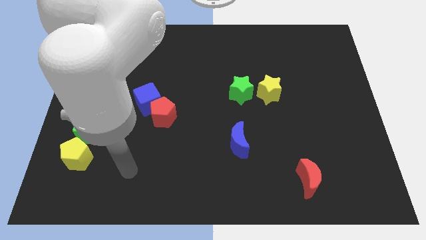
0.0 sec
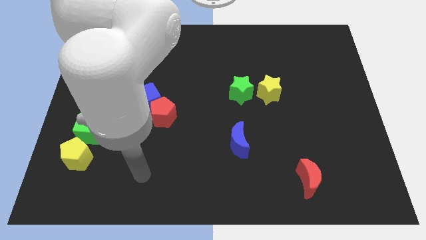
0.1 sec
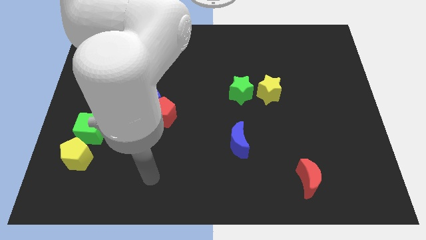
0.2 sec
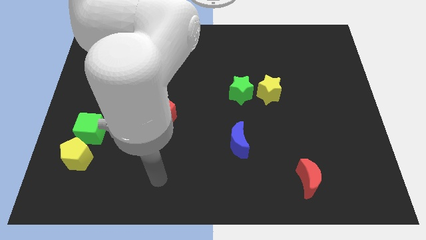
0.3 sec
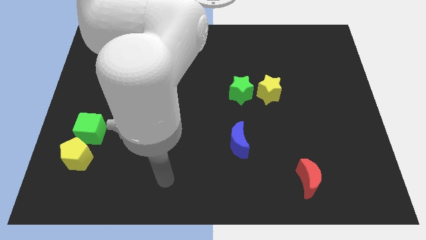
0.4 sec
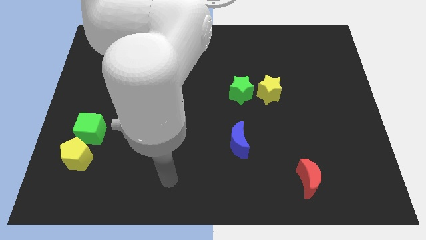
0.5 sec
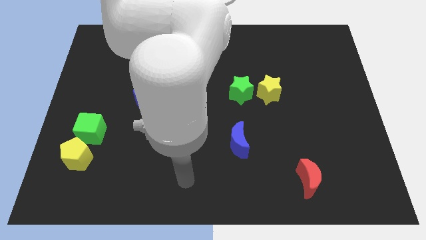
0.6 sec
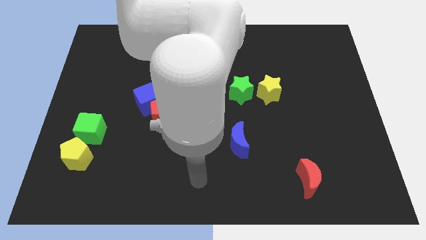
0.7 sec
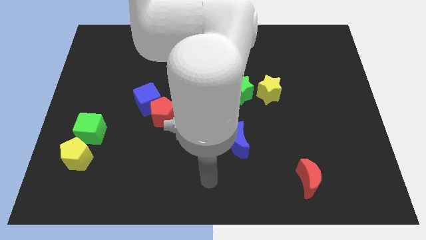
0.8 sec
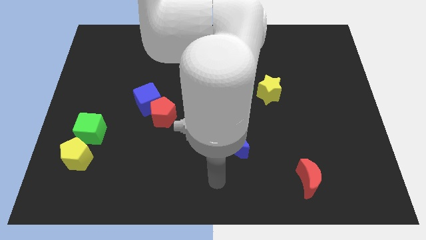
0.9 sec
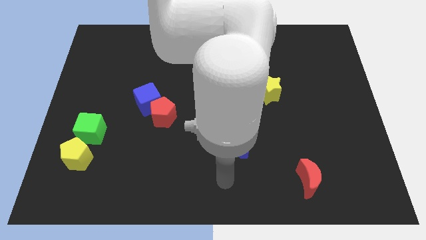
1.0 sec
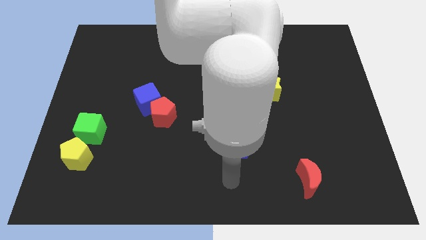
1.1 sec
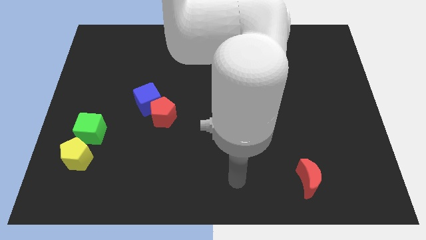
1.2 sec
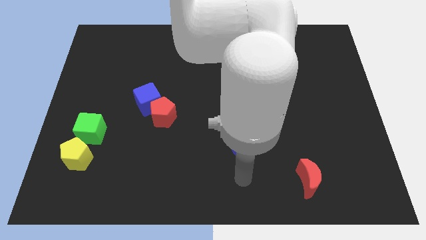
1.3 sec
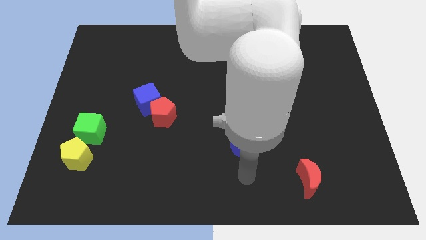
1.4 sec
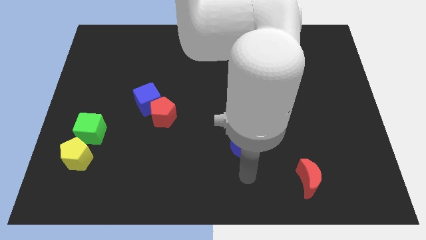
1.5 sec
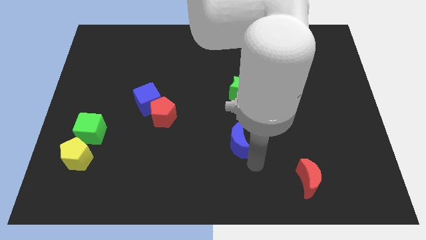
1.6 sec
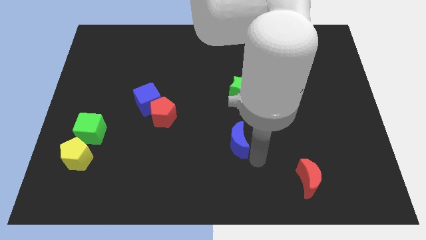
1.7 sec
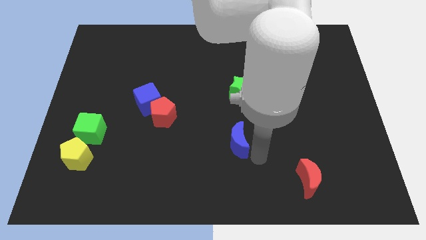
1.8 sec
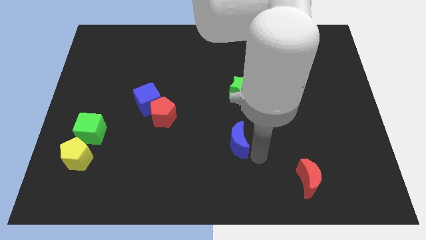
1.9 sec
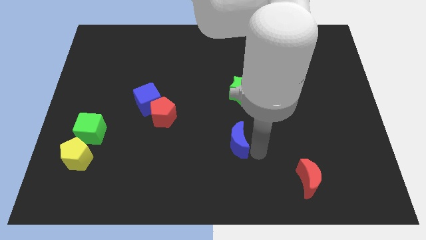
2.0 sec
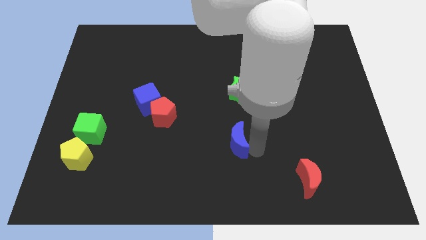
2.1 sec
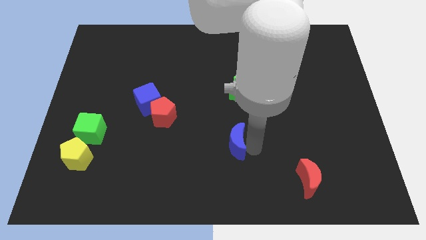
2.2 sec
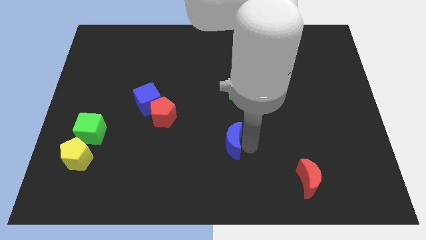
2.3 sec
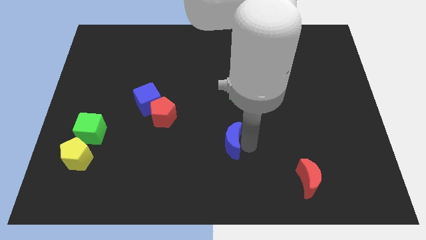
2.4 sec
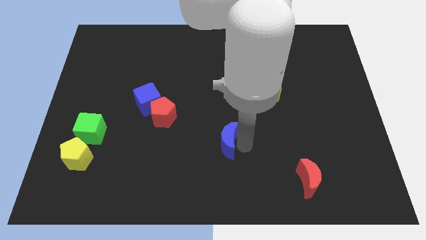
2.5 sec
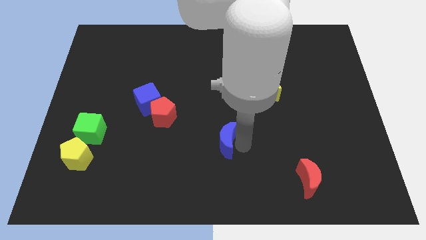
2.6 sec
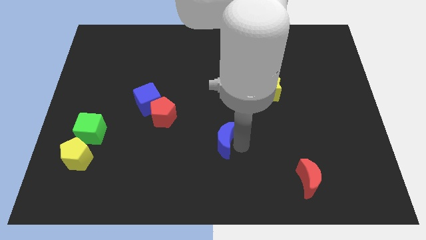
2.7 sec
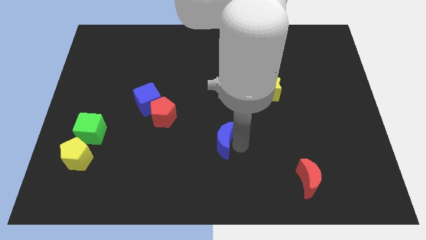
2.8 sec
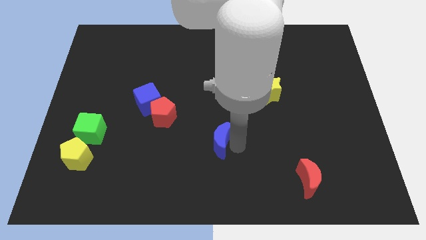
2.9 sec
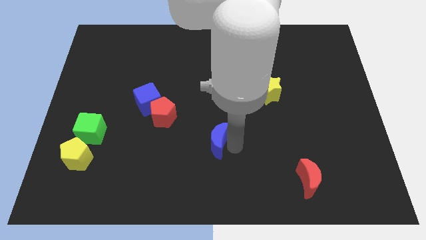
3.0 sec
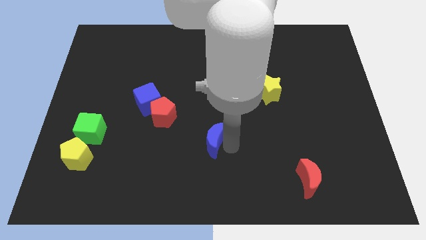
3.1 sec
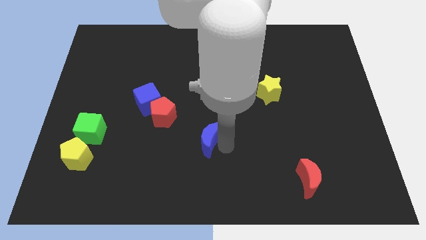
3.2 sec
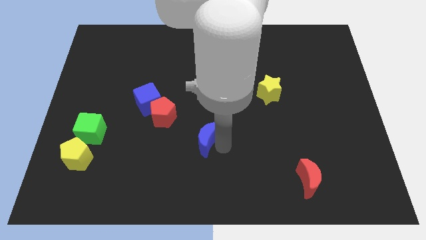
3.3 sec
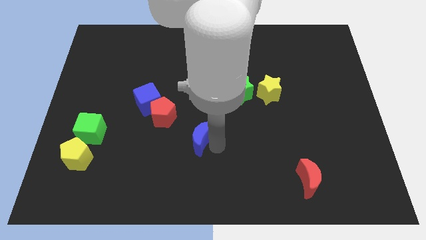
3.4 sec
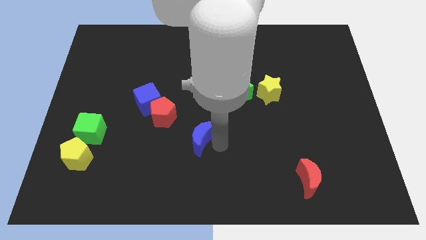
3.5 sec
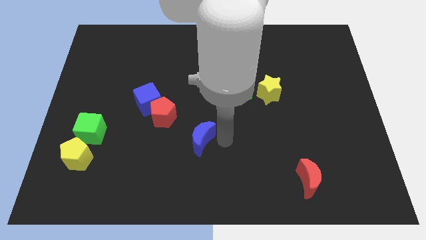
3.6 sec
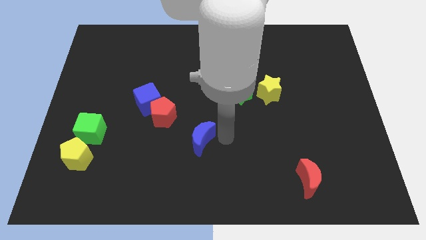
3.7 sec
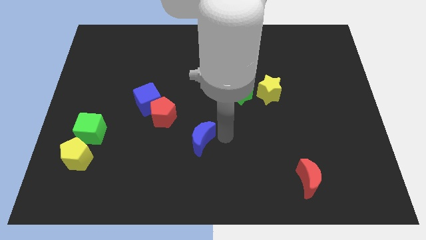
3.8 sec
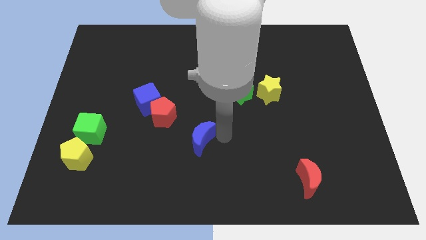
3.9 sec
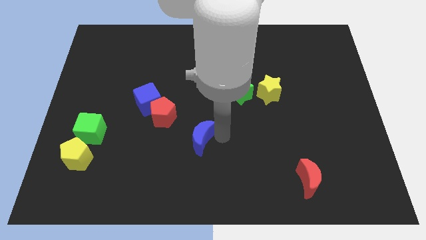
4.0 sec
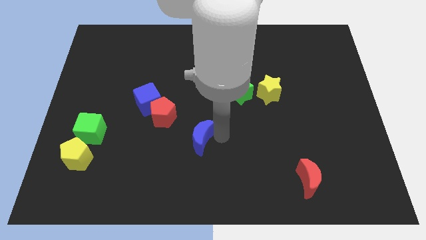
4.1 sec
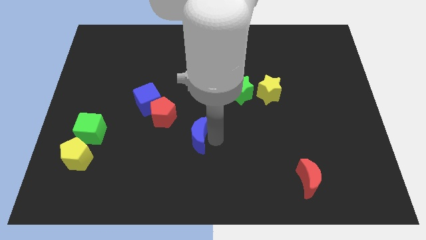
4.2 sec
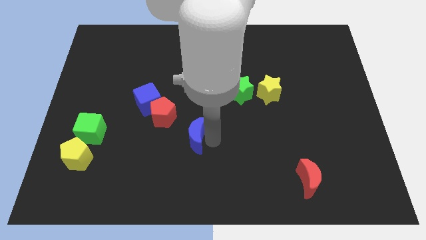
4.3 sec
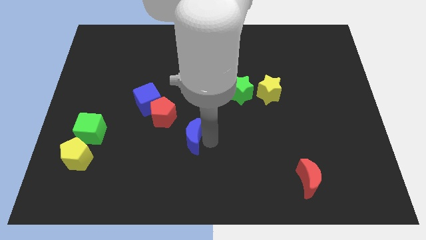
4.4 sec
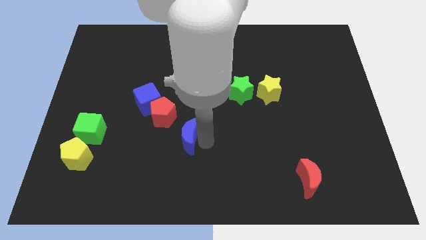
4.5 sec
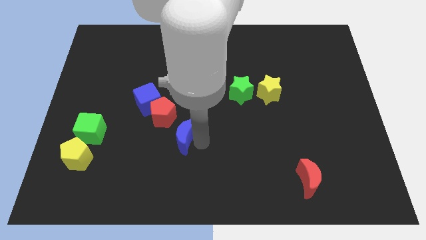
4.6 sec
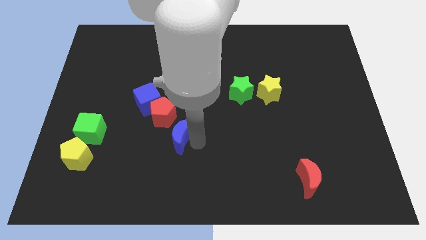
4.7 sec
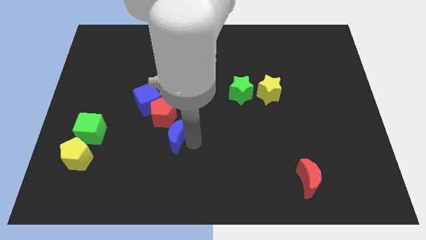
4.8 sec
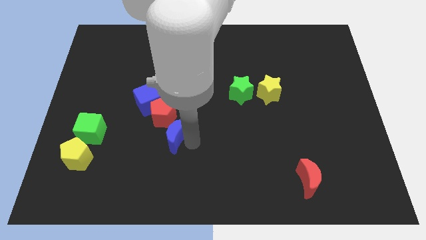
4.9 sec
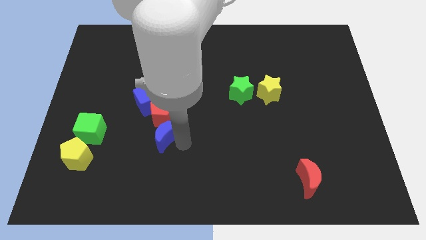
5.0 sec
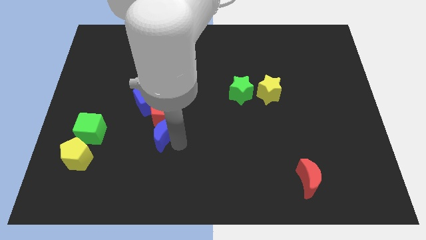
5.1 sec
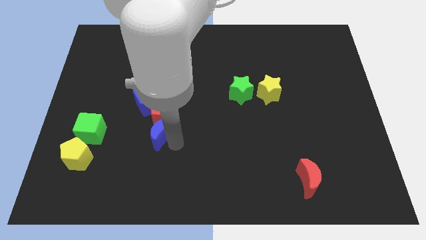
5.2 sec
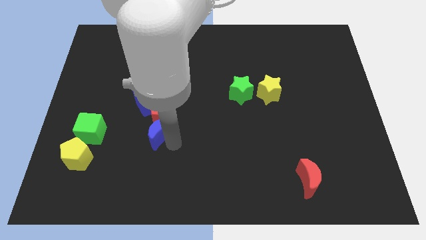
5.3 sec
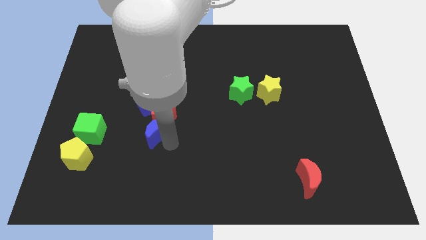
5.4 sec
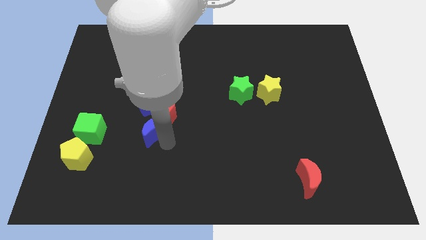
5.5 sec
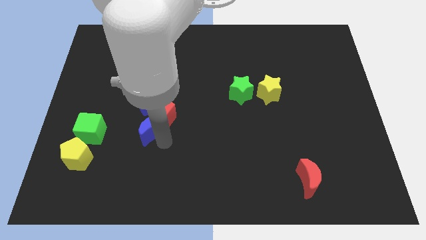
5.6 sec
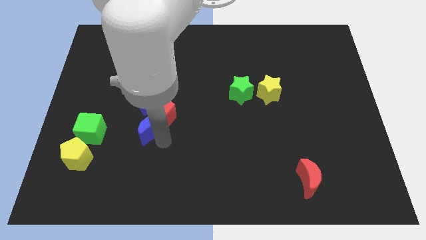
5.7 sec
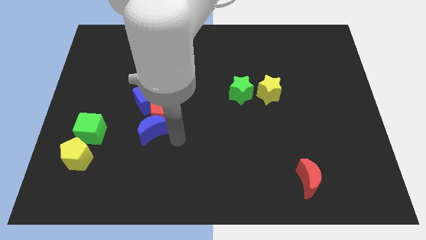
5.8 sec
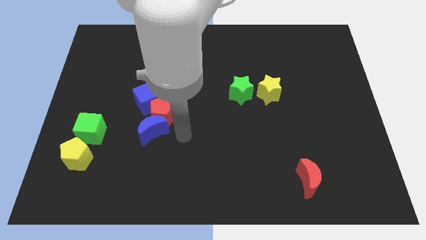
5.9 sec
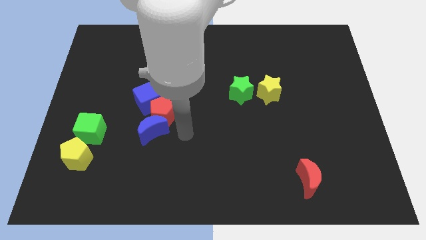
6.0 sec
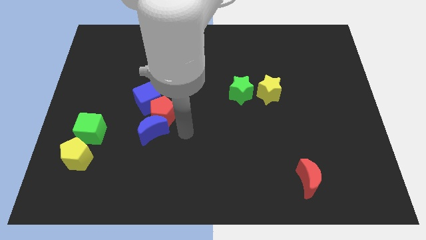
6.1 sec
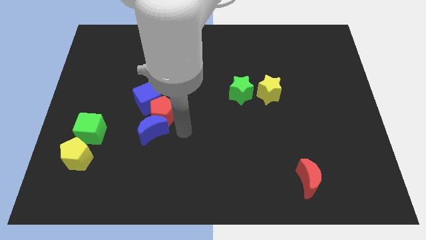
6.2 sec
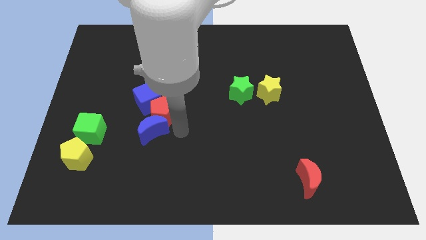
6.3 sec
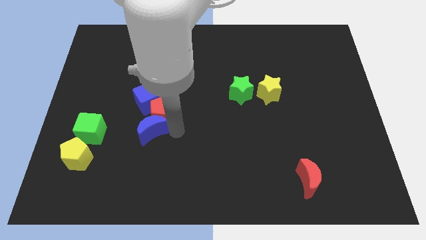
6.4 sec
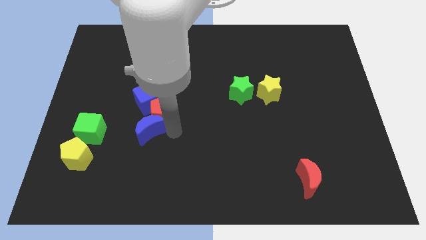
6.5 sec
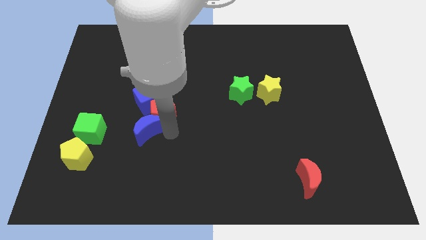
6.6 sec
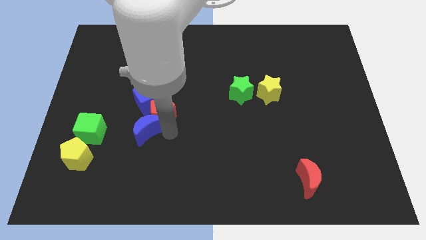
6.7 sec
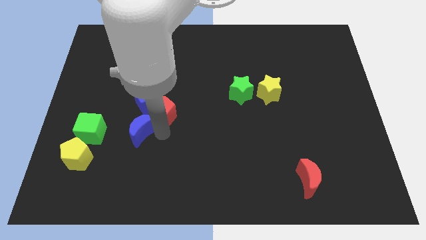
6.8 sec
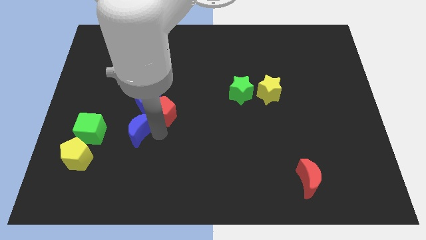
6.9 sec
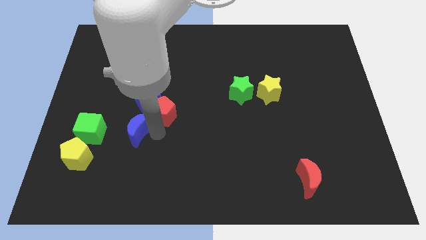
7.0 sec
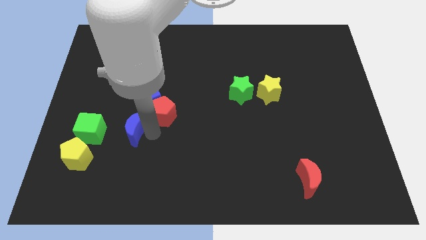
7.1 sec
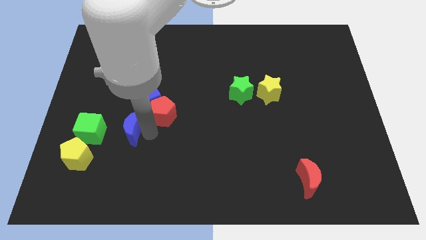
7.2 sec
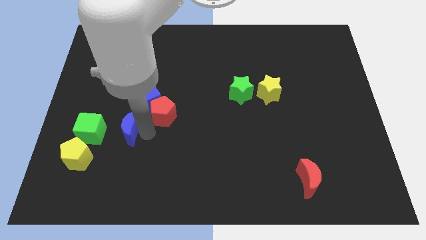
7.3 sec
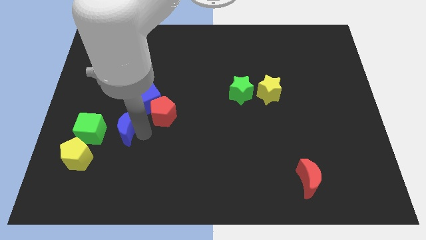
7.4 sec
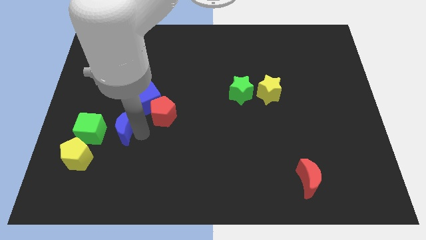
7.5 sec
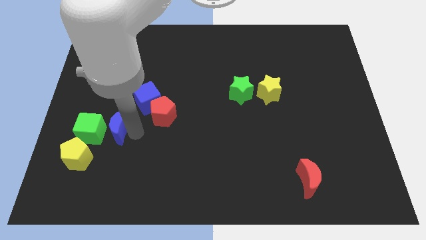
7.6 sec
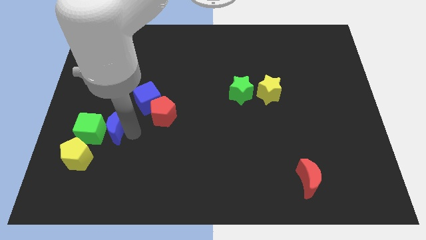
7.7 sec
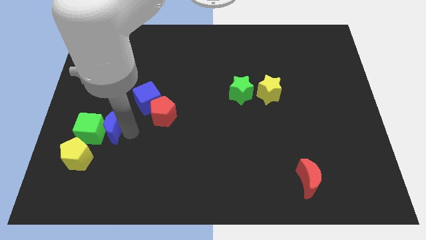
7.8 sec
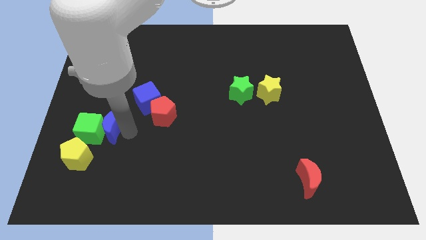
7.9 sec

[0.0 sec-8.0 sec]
slide the blue moon towards the green cube

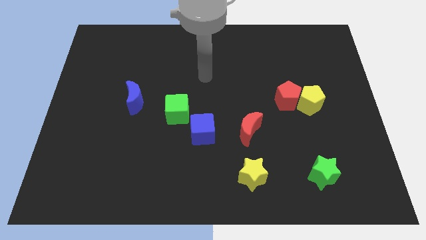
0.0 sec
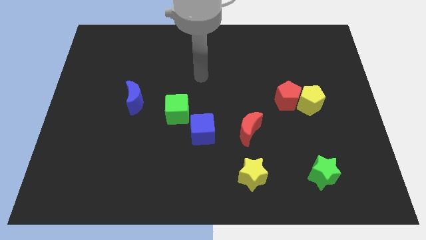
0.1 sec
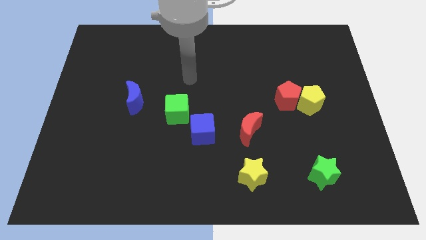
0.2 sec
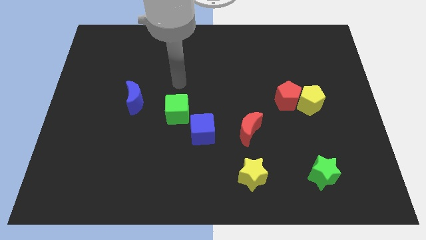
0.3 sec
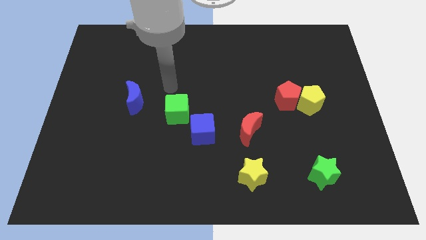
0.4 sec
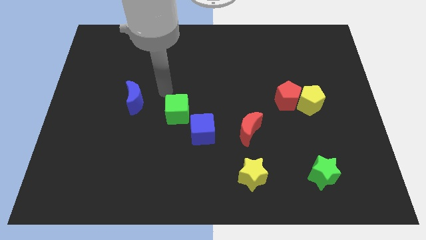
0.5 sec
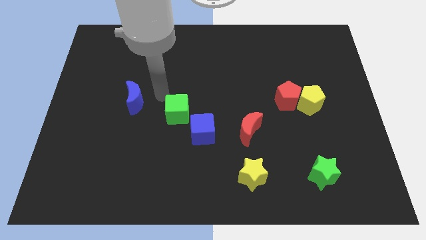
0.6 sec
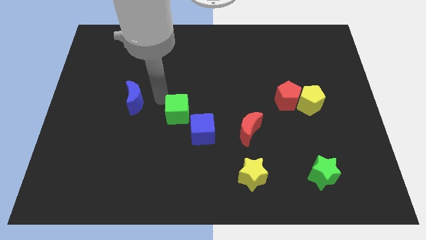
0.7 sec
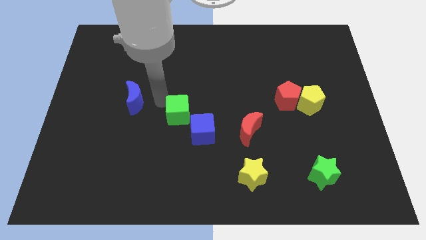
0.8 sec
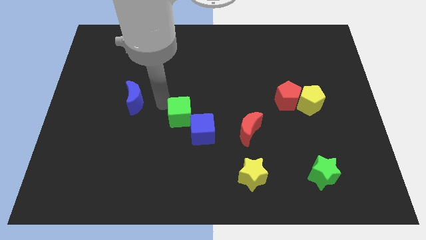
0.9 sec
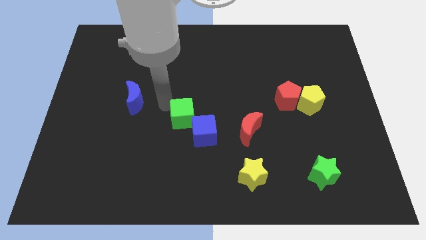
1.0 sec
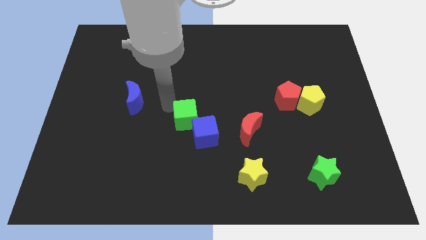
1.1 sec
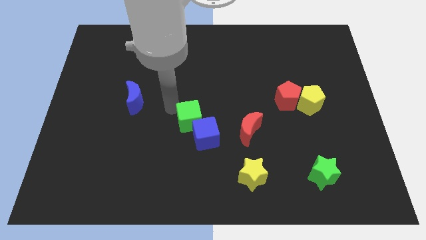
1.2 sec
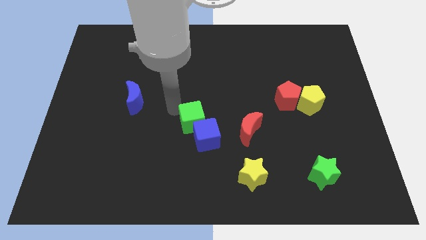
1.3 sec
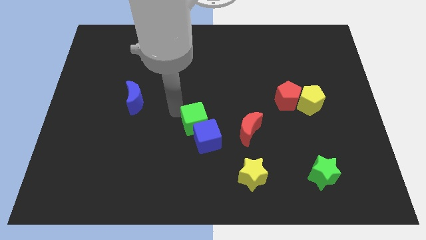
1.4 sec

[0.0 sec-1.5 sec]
push the green cube next to the blue cube
